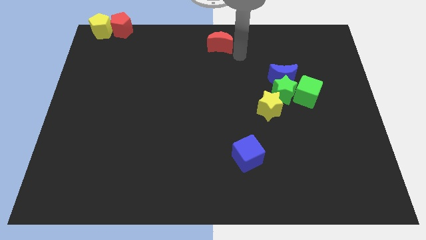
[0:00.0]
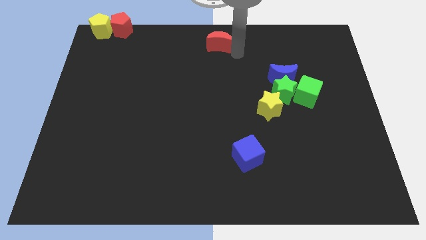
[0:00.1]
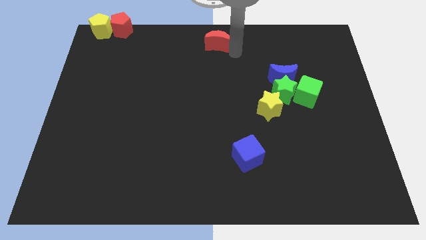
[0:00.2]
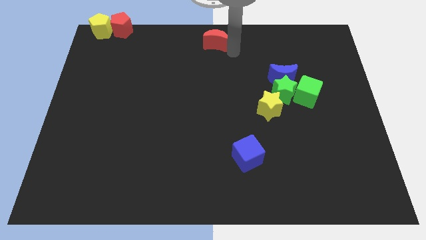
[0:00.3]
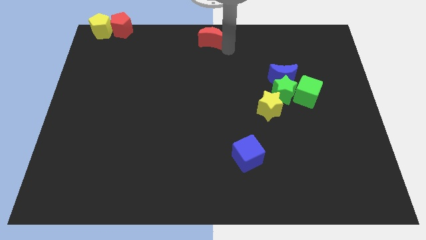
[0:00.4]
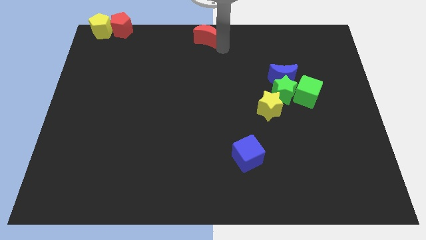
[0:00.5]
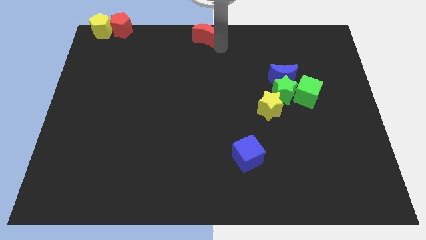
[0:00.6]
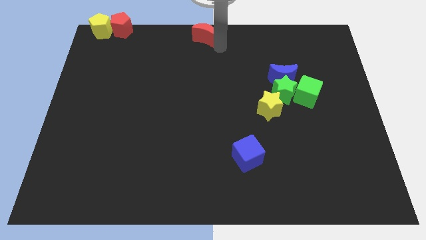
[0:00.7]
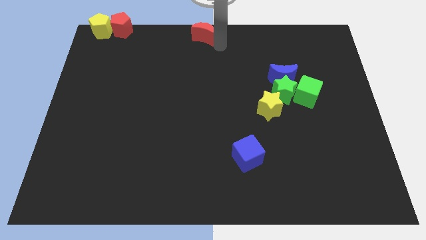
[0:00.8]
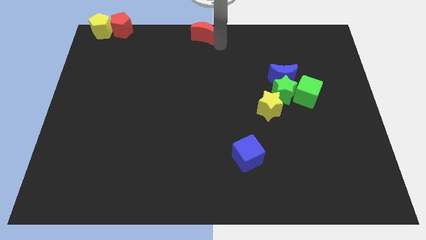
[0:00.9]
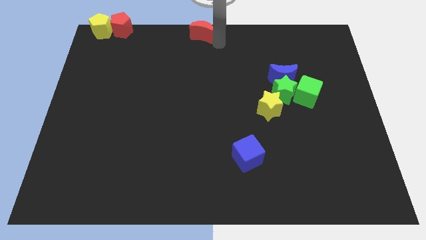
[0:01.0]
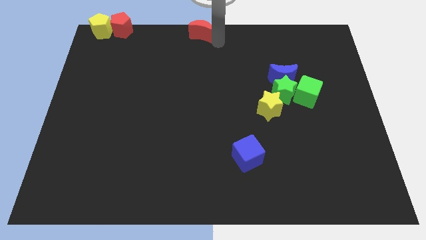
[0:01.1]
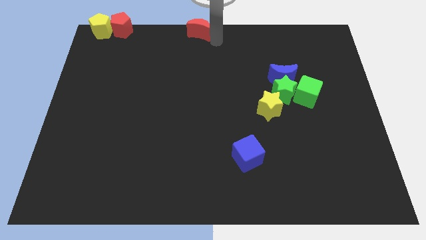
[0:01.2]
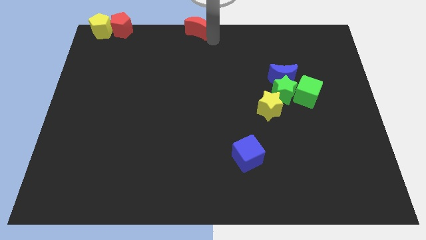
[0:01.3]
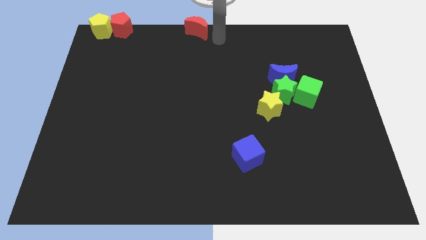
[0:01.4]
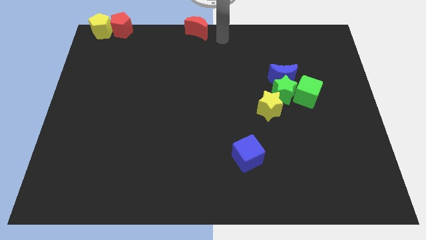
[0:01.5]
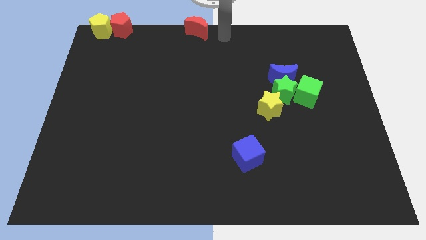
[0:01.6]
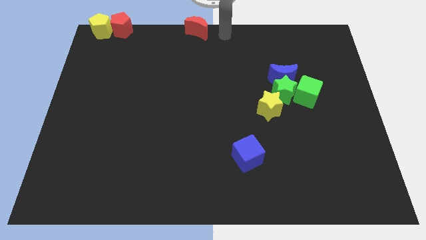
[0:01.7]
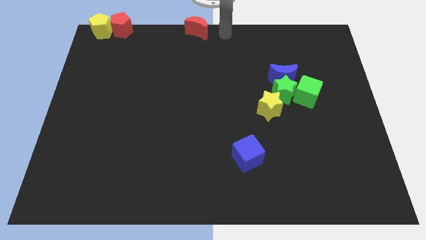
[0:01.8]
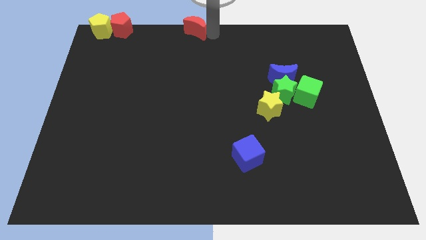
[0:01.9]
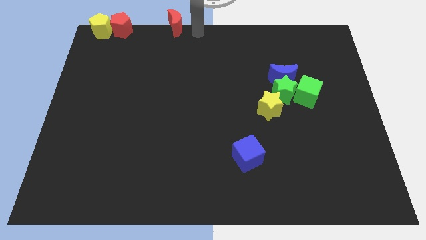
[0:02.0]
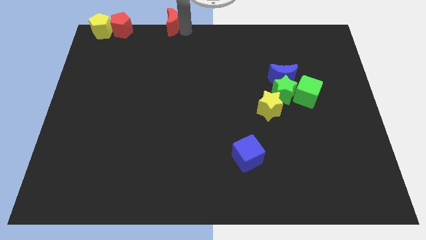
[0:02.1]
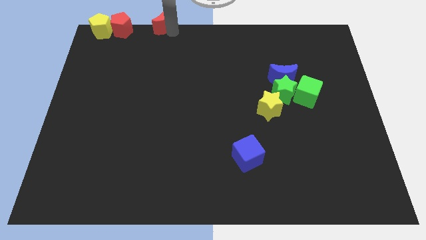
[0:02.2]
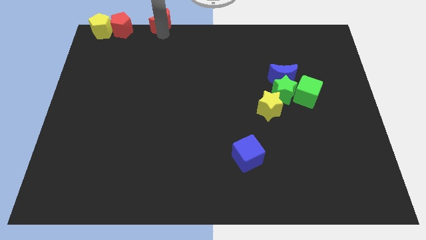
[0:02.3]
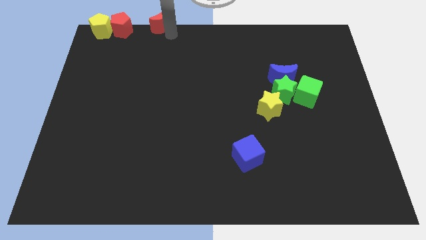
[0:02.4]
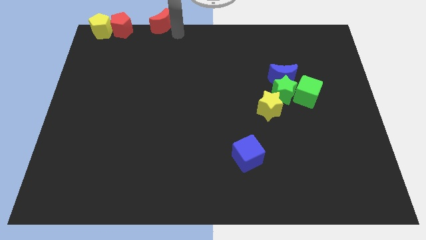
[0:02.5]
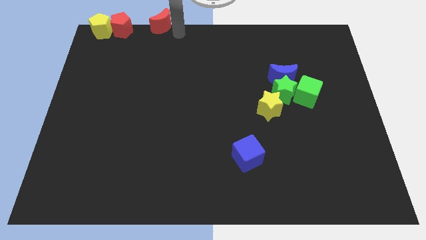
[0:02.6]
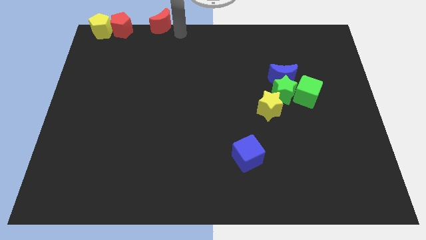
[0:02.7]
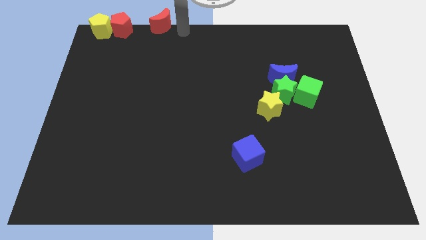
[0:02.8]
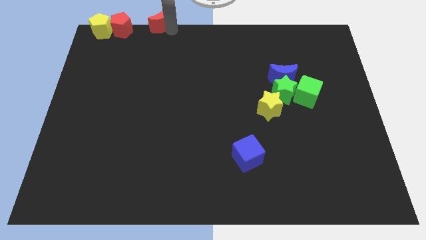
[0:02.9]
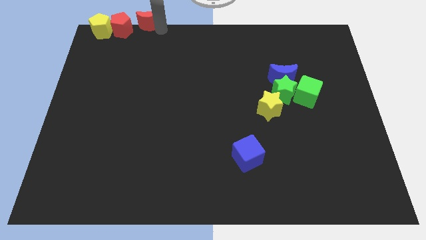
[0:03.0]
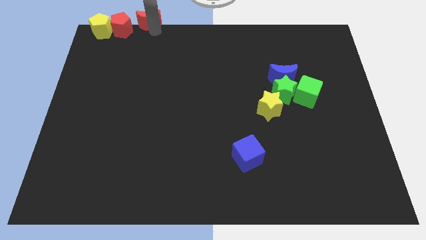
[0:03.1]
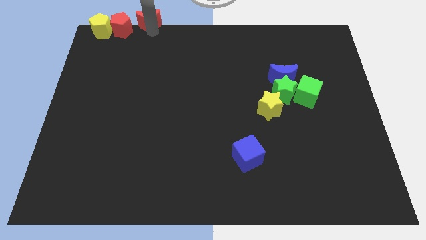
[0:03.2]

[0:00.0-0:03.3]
move the red crescent to the right of the red pentagon

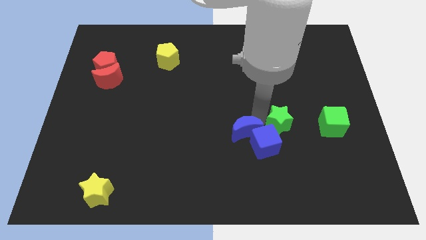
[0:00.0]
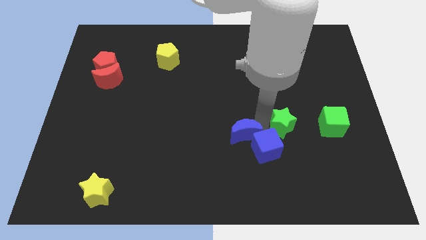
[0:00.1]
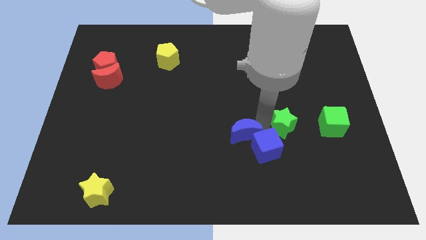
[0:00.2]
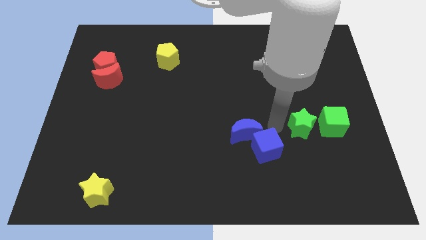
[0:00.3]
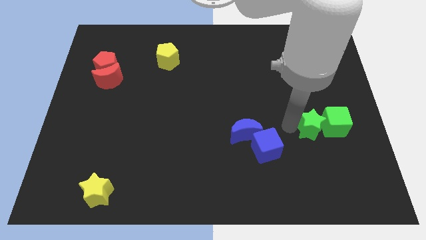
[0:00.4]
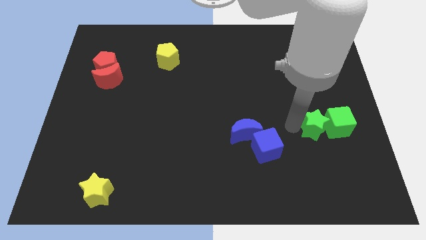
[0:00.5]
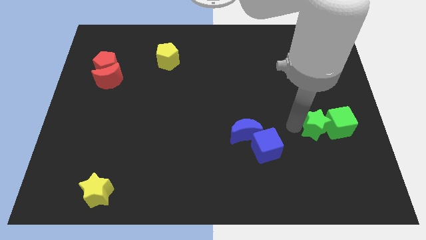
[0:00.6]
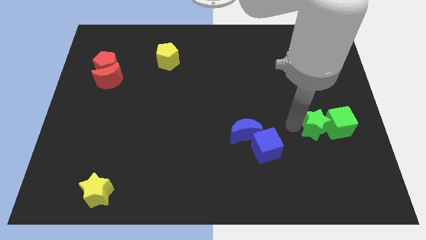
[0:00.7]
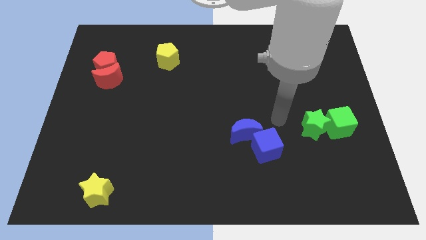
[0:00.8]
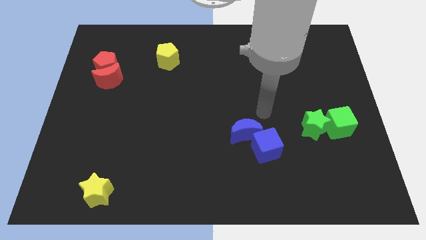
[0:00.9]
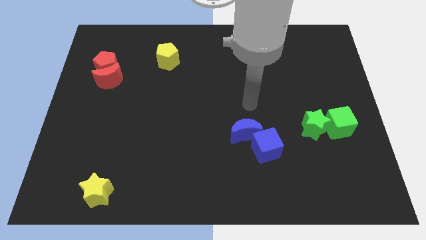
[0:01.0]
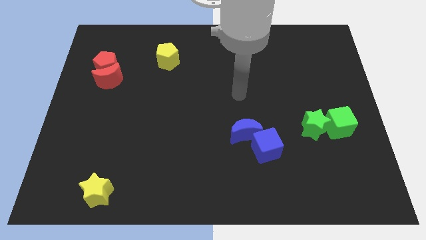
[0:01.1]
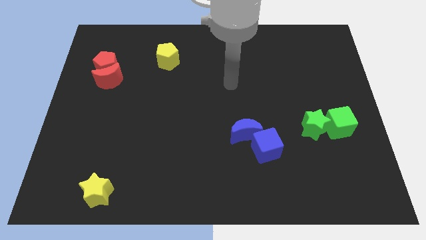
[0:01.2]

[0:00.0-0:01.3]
separate the green star and blue blocks towards the right

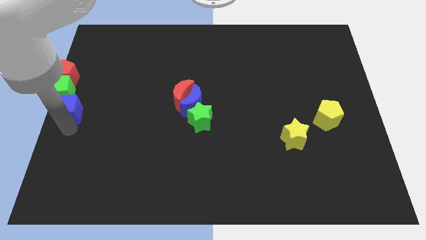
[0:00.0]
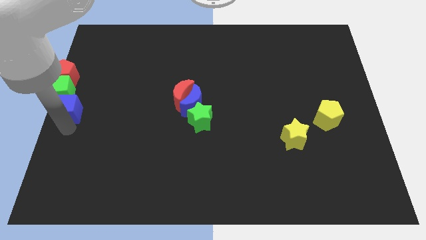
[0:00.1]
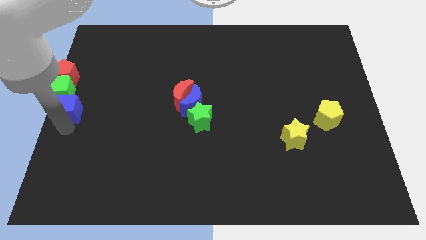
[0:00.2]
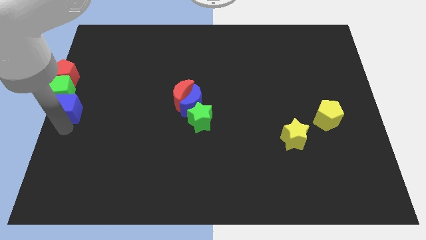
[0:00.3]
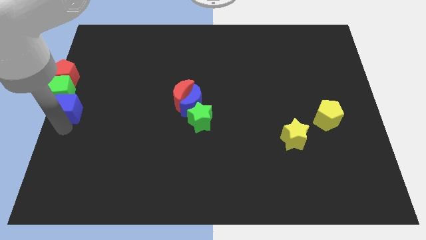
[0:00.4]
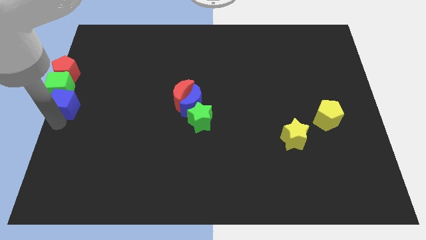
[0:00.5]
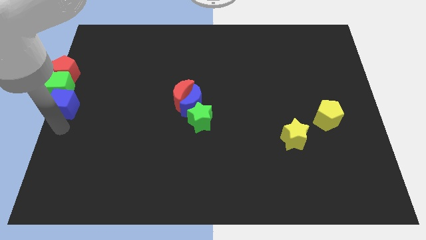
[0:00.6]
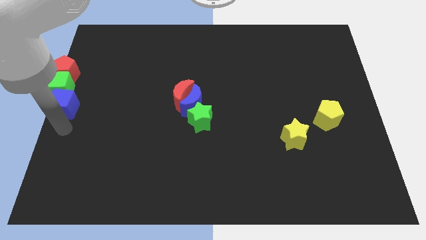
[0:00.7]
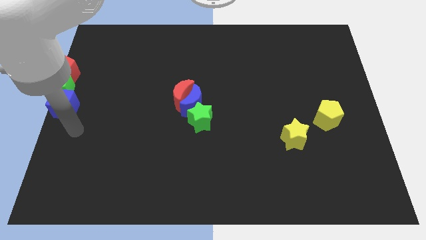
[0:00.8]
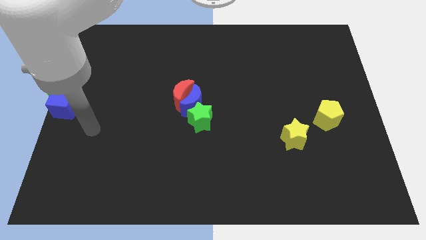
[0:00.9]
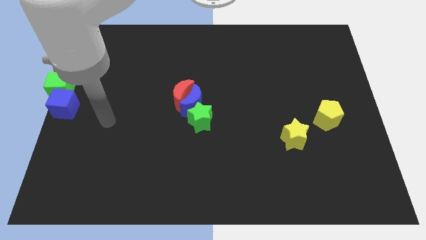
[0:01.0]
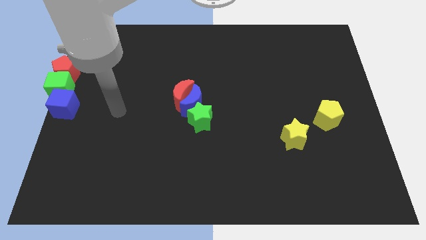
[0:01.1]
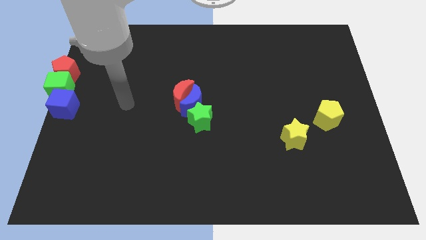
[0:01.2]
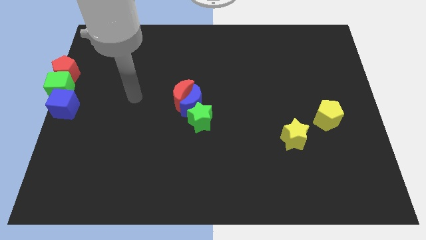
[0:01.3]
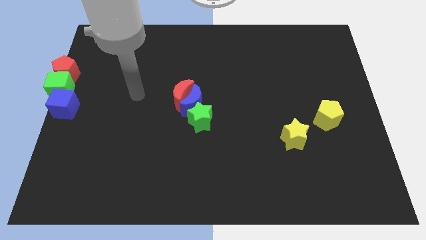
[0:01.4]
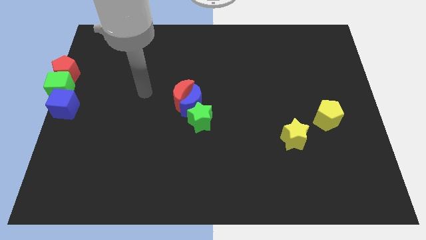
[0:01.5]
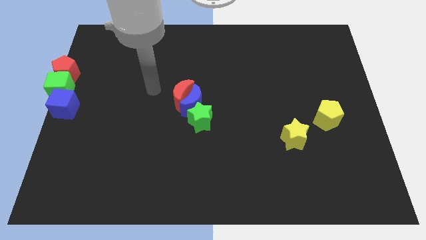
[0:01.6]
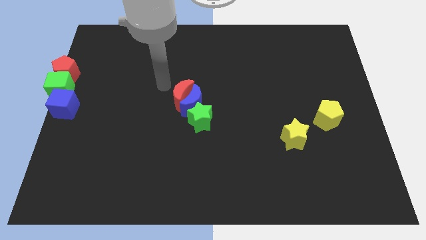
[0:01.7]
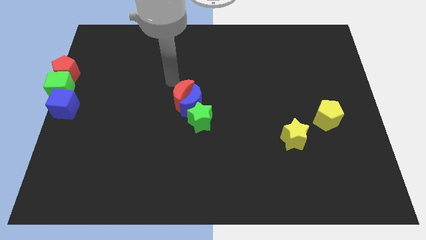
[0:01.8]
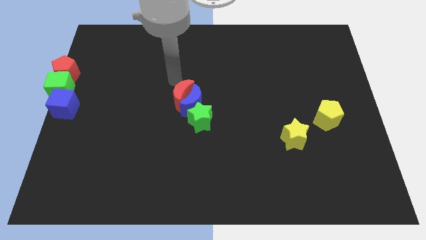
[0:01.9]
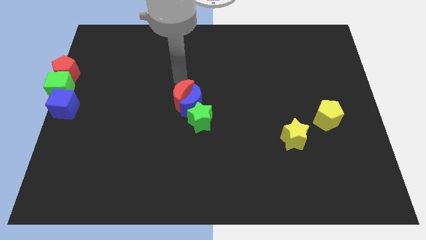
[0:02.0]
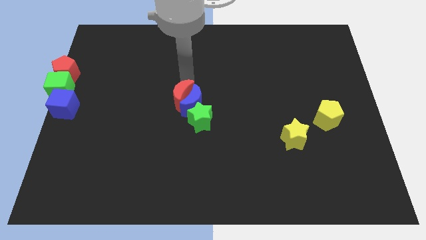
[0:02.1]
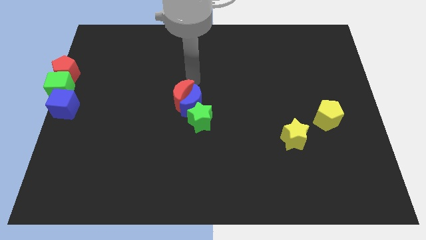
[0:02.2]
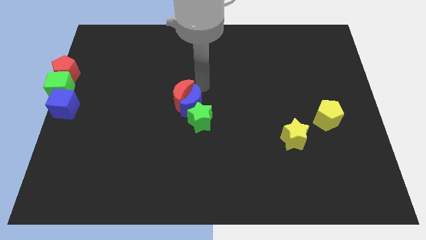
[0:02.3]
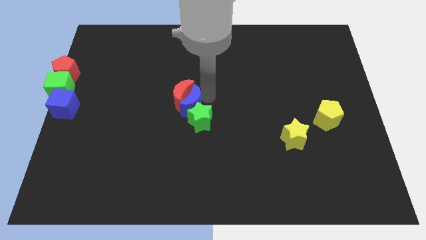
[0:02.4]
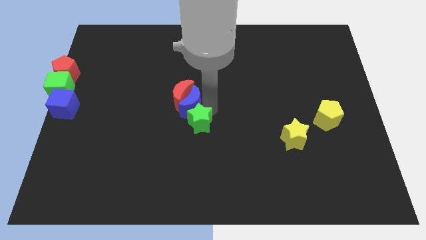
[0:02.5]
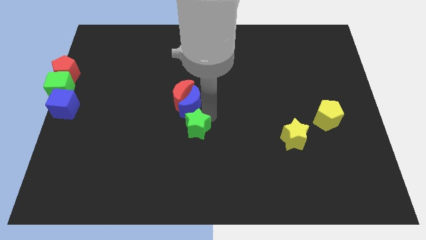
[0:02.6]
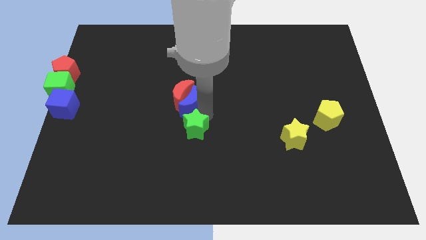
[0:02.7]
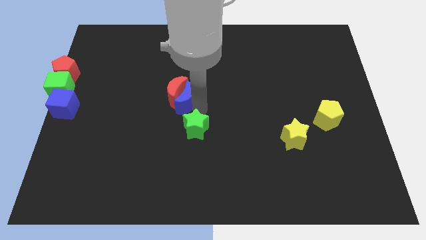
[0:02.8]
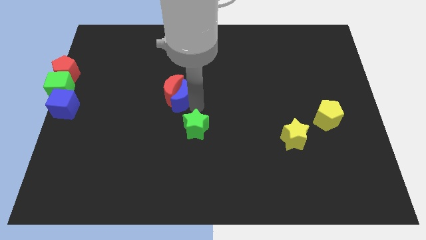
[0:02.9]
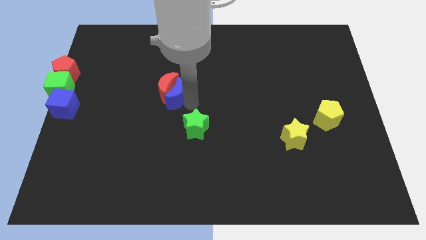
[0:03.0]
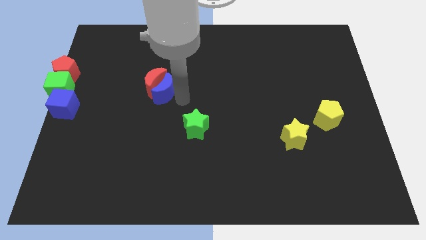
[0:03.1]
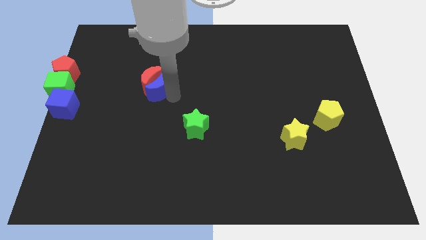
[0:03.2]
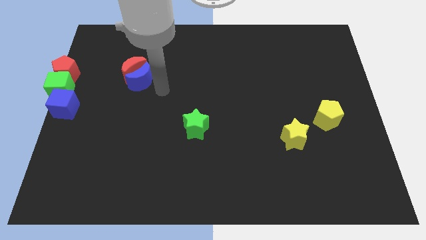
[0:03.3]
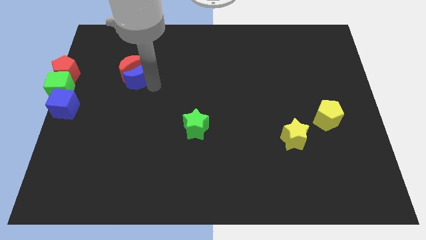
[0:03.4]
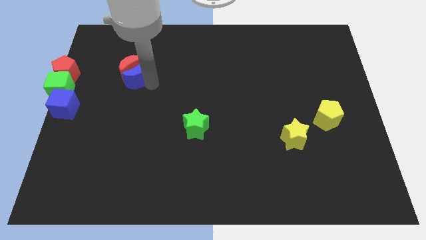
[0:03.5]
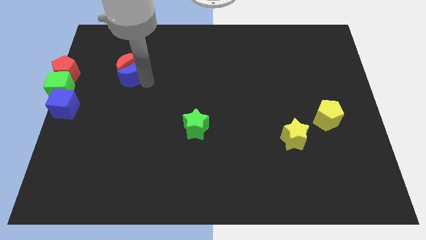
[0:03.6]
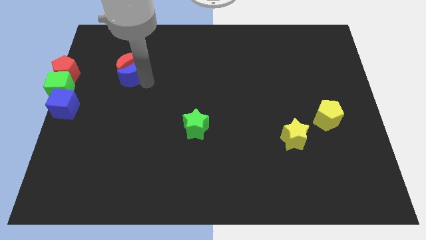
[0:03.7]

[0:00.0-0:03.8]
separate the blue moon and the red moon from the green star

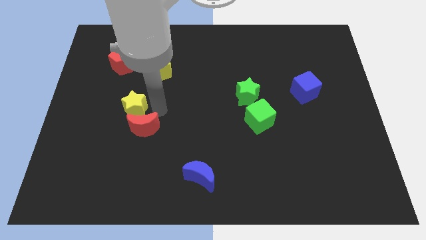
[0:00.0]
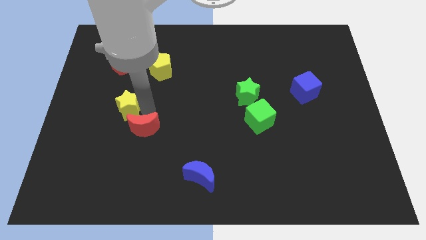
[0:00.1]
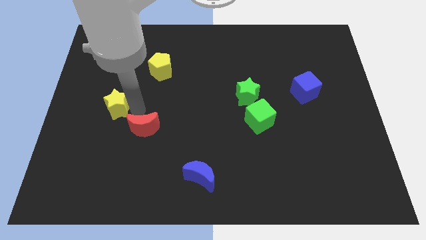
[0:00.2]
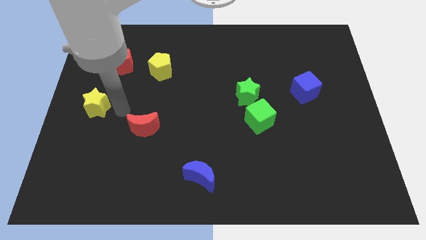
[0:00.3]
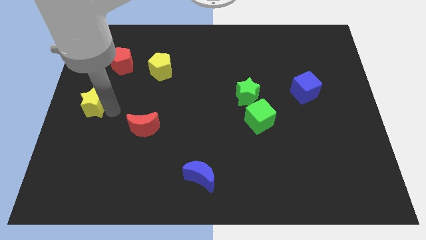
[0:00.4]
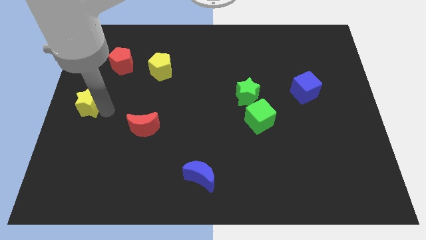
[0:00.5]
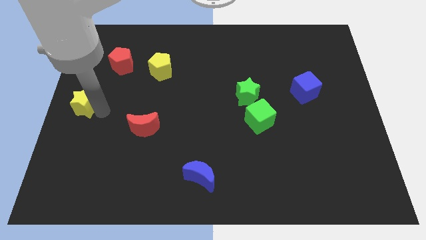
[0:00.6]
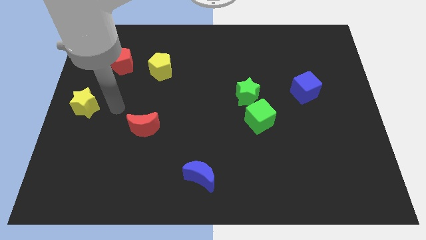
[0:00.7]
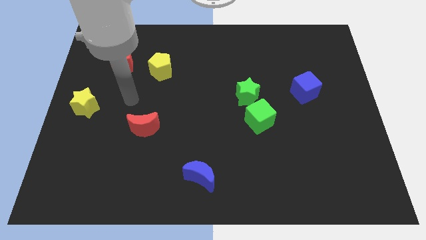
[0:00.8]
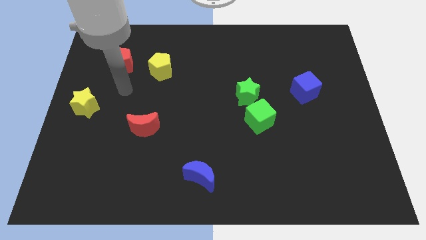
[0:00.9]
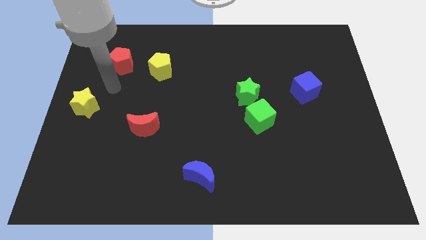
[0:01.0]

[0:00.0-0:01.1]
push the yellow star to the bottom left of the red pentagon
